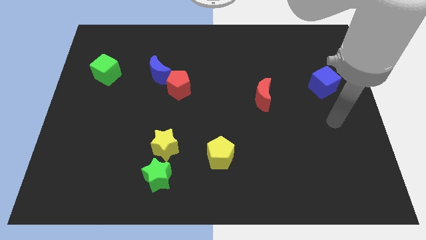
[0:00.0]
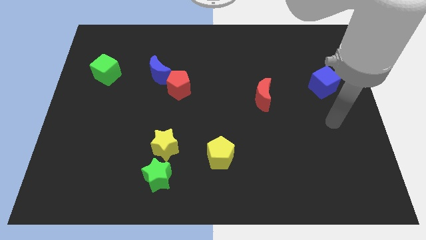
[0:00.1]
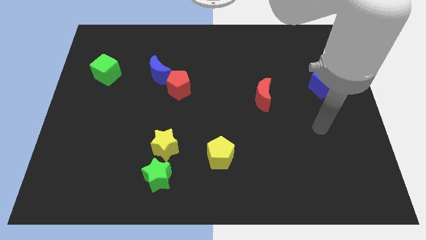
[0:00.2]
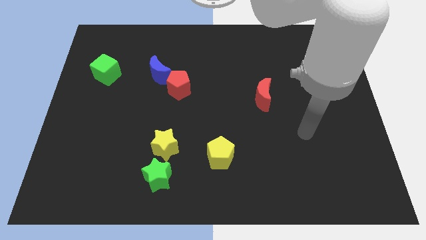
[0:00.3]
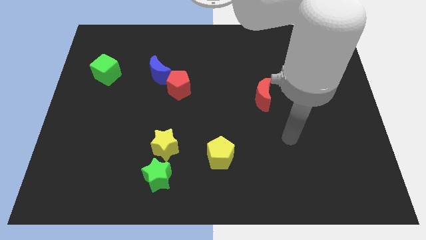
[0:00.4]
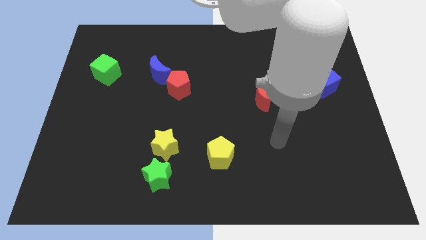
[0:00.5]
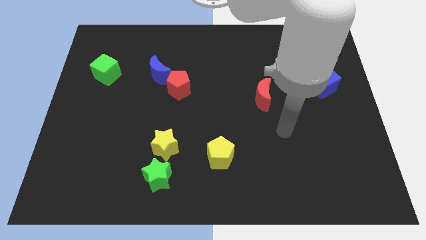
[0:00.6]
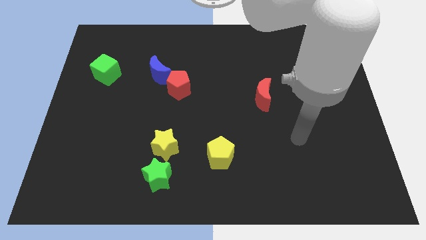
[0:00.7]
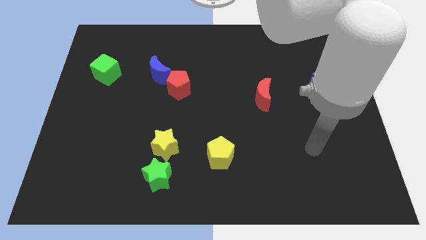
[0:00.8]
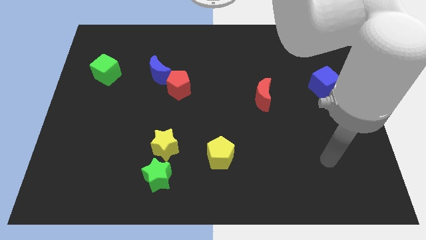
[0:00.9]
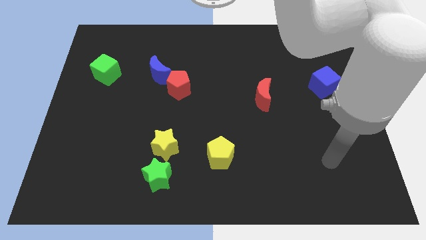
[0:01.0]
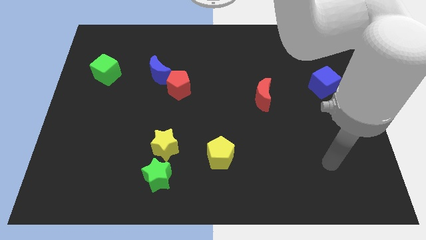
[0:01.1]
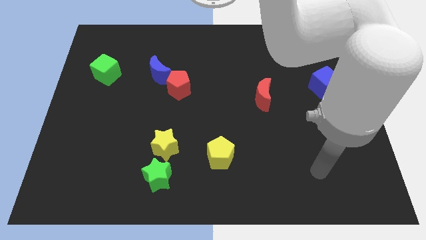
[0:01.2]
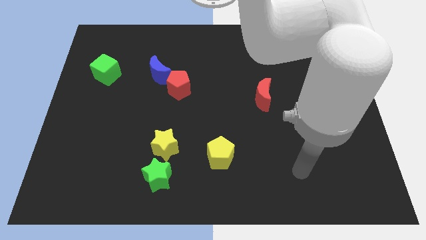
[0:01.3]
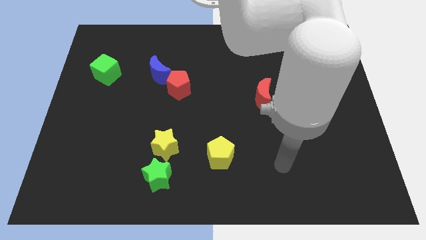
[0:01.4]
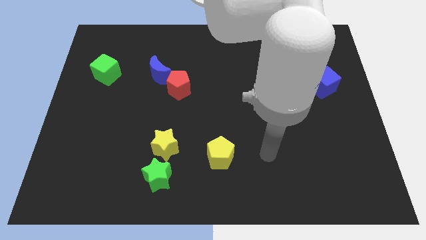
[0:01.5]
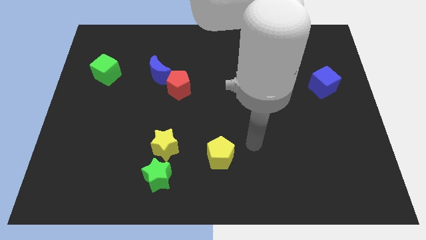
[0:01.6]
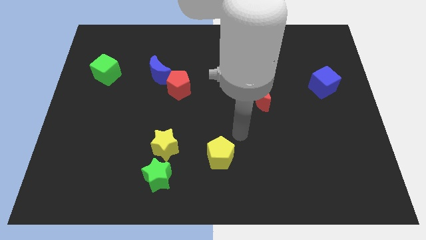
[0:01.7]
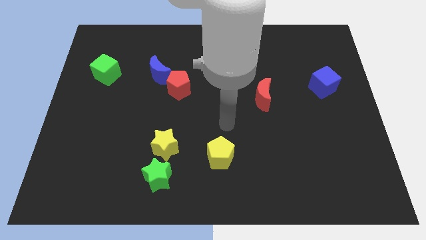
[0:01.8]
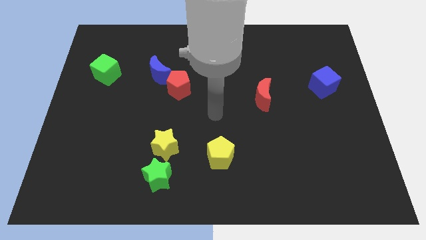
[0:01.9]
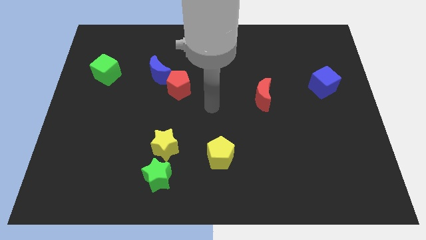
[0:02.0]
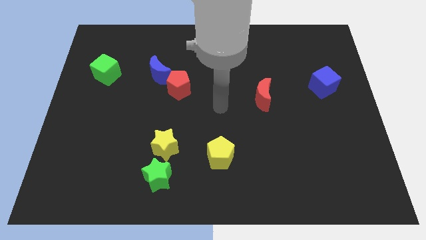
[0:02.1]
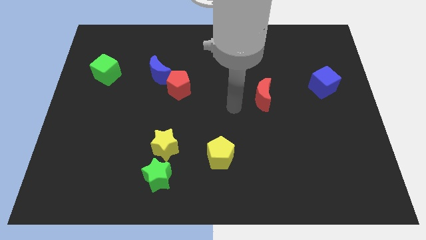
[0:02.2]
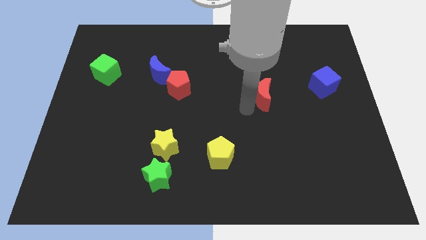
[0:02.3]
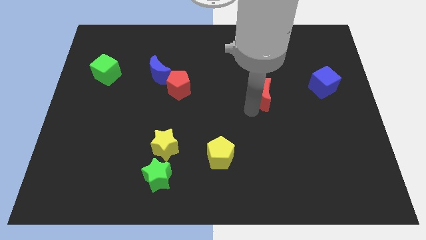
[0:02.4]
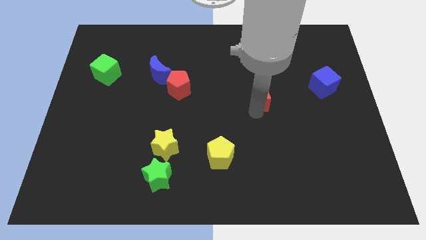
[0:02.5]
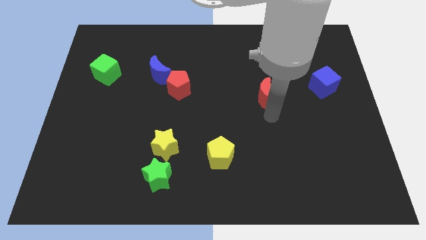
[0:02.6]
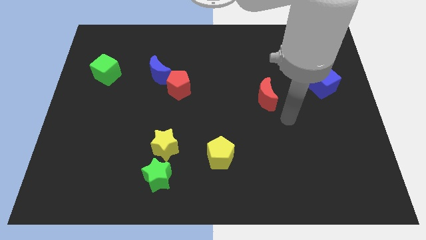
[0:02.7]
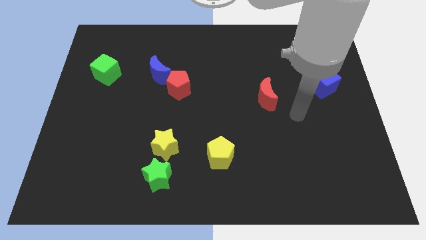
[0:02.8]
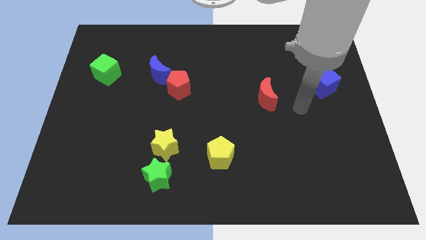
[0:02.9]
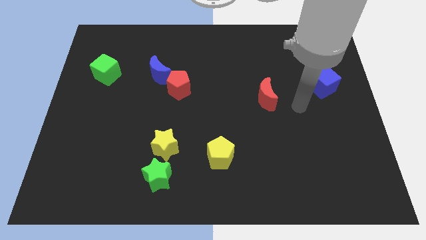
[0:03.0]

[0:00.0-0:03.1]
tap the red crescent

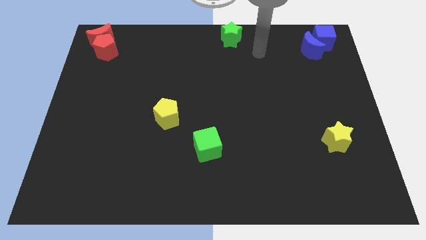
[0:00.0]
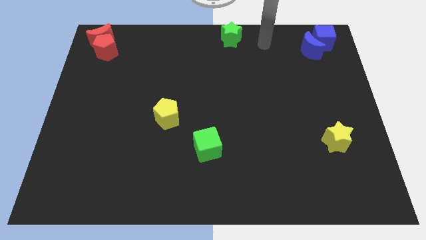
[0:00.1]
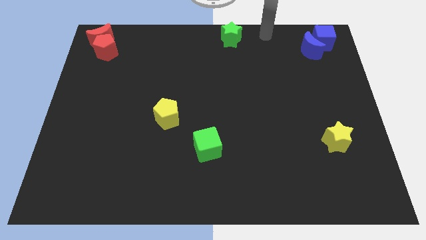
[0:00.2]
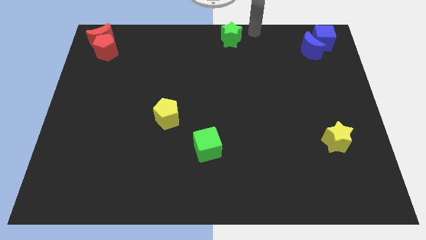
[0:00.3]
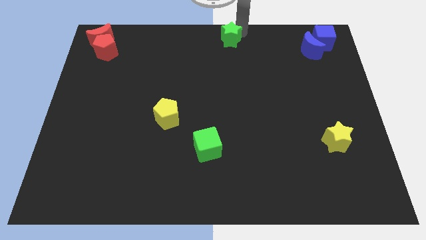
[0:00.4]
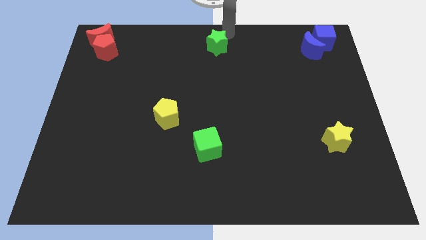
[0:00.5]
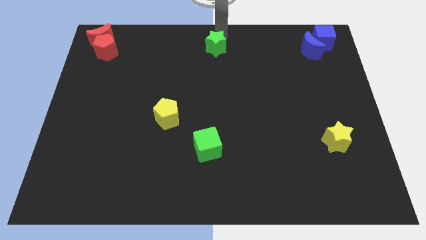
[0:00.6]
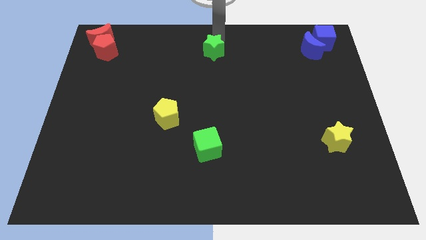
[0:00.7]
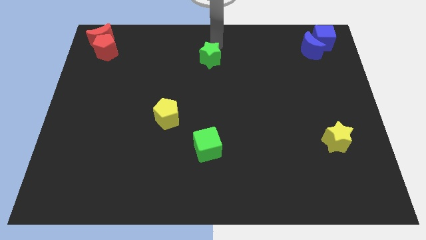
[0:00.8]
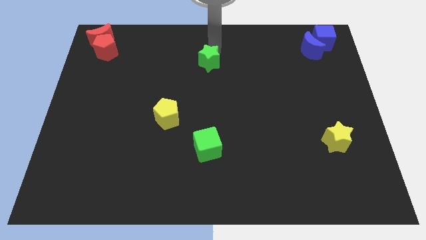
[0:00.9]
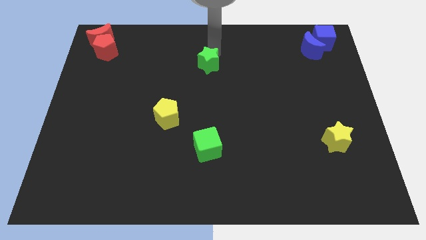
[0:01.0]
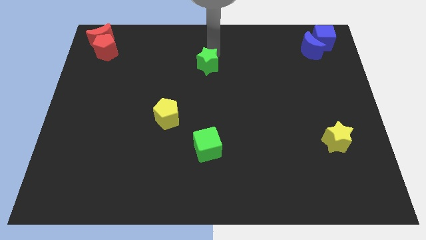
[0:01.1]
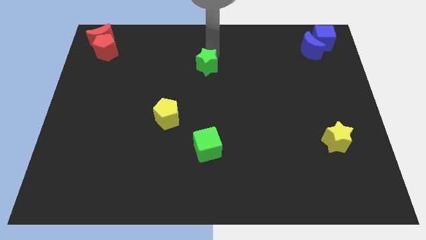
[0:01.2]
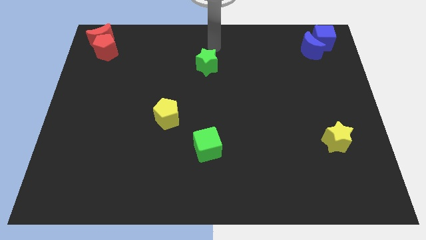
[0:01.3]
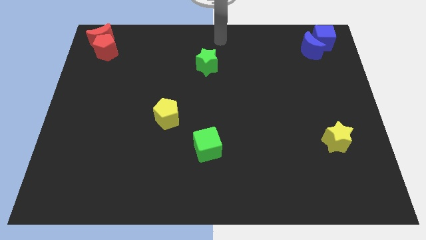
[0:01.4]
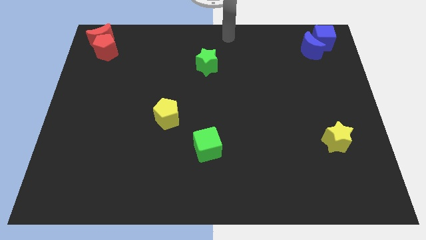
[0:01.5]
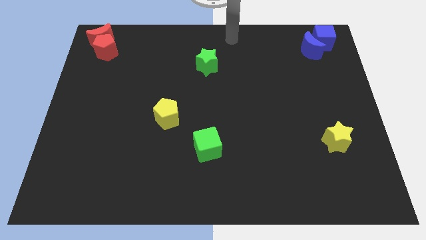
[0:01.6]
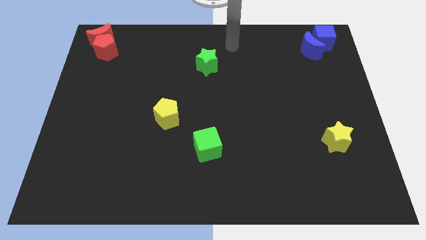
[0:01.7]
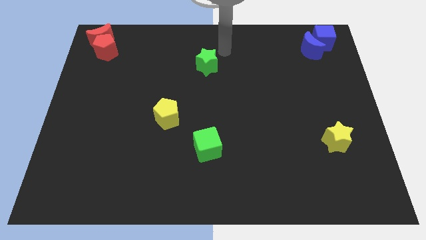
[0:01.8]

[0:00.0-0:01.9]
push the green star downwards

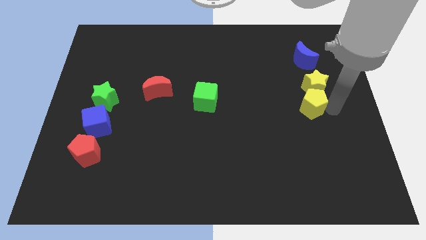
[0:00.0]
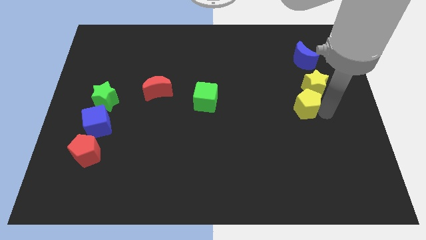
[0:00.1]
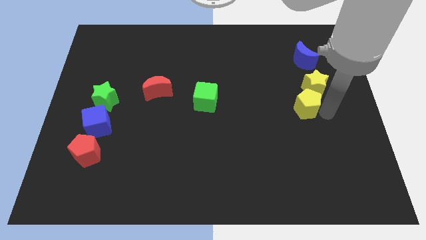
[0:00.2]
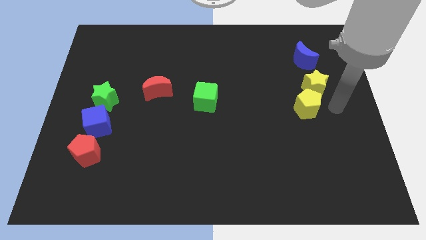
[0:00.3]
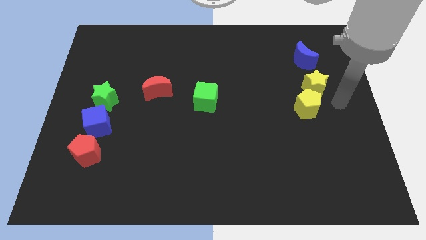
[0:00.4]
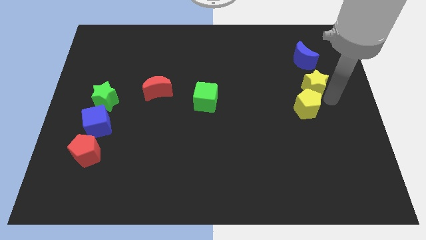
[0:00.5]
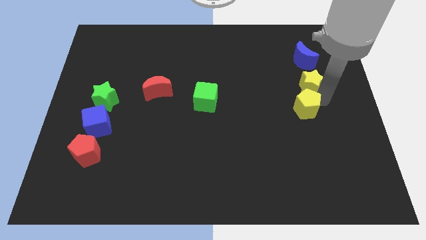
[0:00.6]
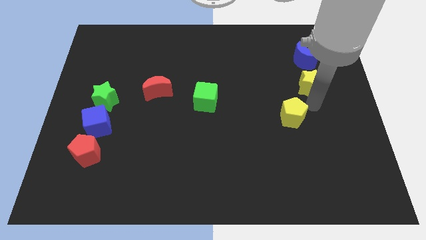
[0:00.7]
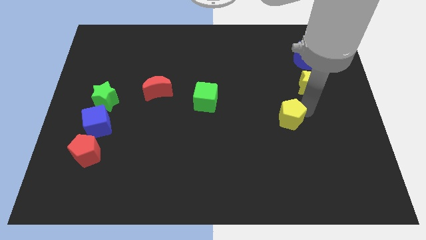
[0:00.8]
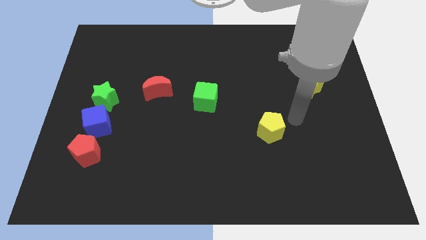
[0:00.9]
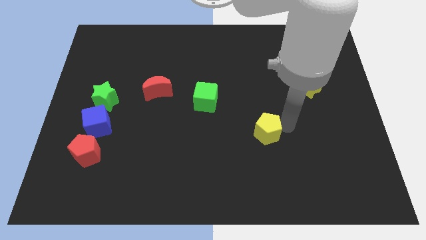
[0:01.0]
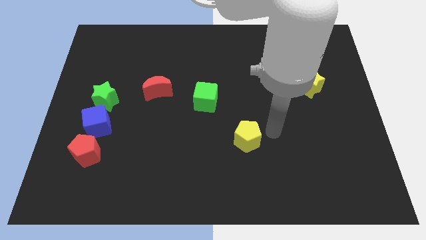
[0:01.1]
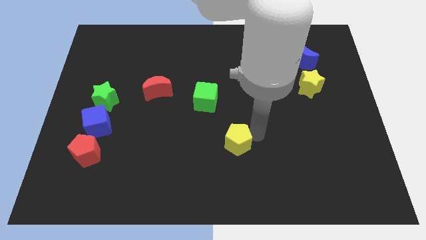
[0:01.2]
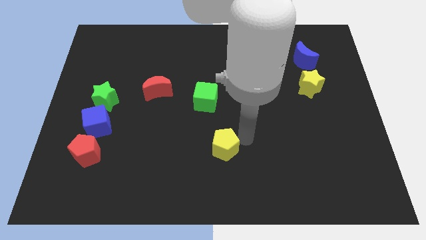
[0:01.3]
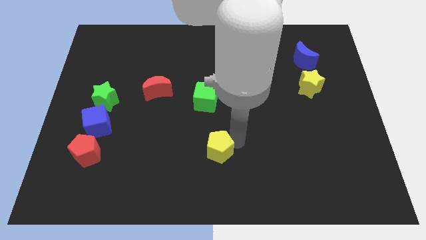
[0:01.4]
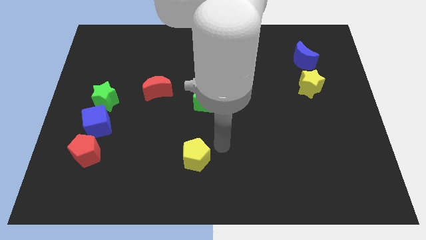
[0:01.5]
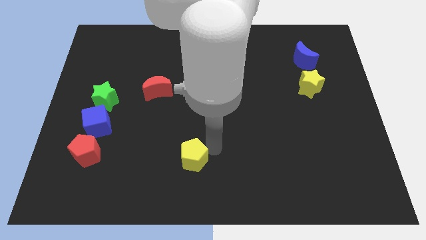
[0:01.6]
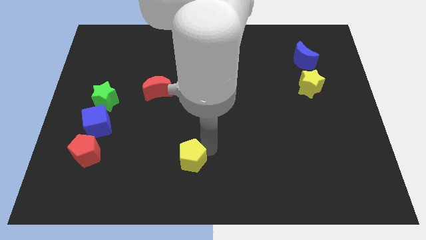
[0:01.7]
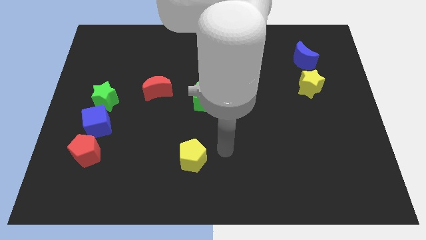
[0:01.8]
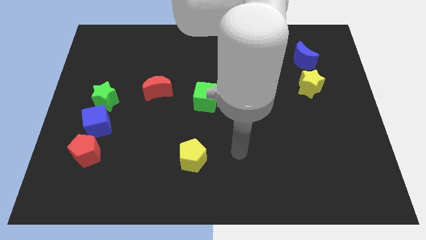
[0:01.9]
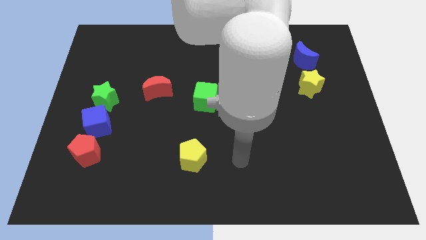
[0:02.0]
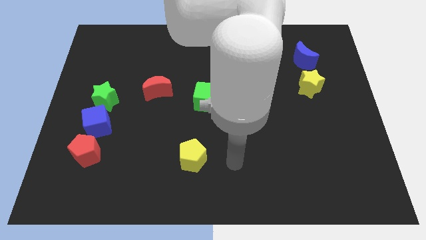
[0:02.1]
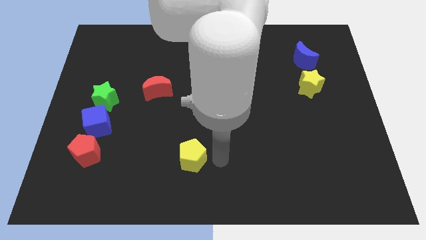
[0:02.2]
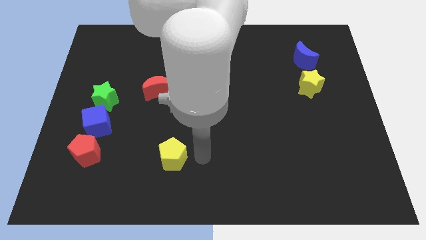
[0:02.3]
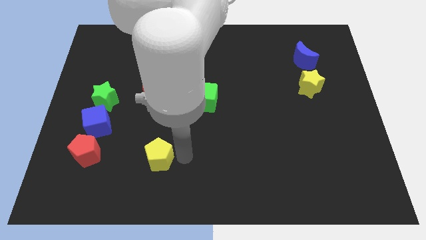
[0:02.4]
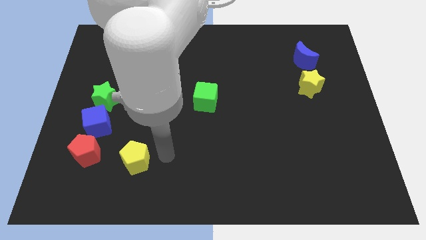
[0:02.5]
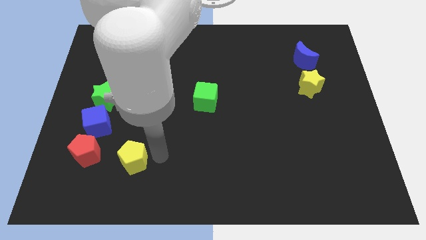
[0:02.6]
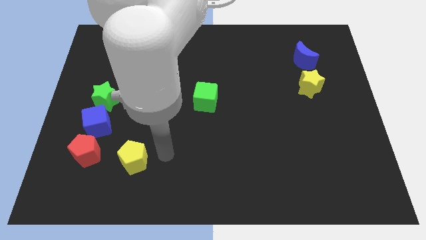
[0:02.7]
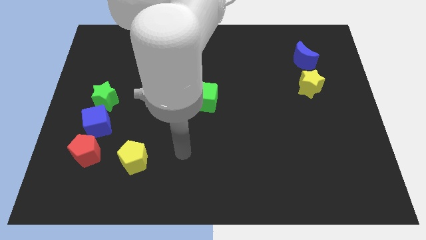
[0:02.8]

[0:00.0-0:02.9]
place the yellow pentagon below the red moon

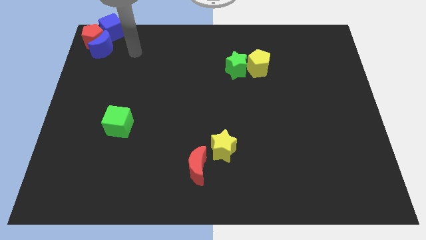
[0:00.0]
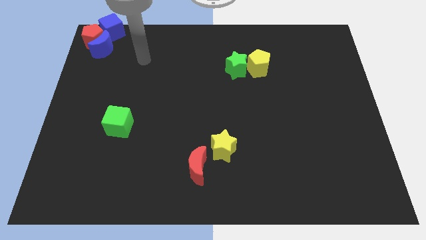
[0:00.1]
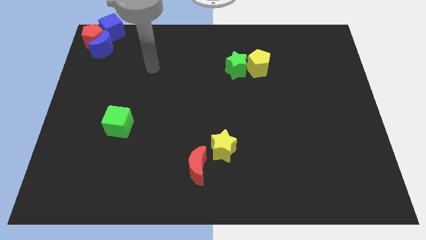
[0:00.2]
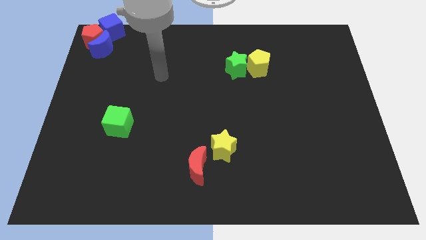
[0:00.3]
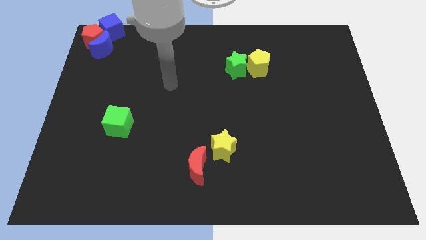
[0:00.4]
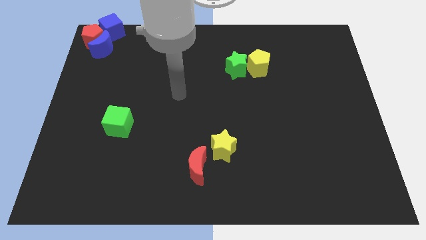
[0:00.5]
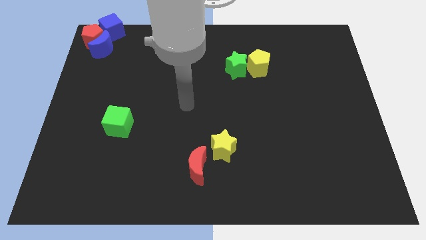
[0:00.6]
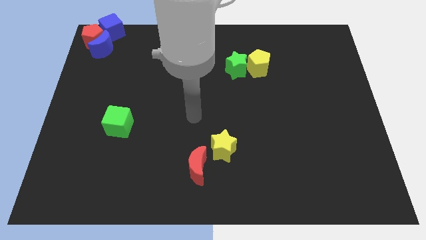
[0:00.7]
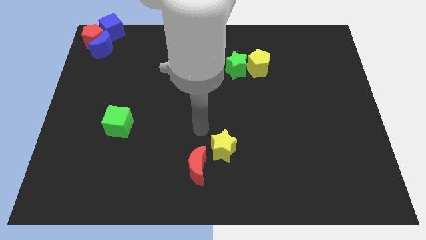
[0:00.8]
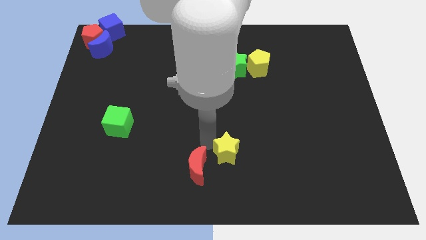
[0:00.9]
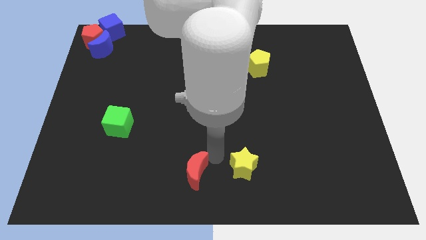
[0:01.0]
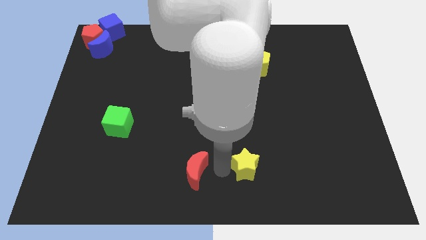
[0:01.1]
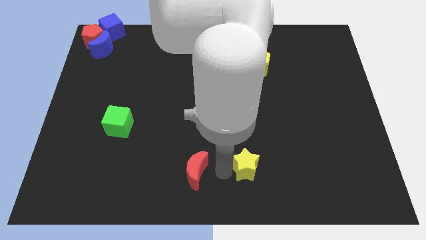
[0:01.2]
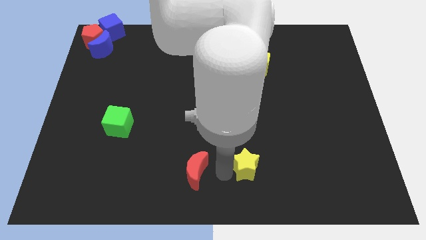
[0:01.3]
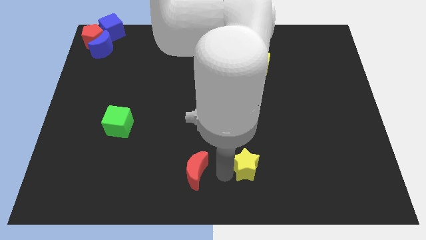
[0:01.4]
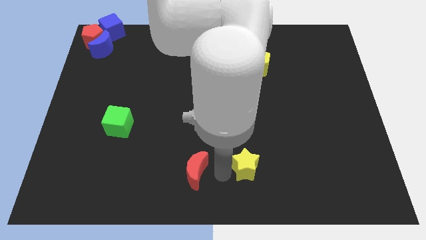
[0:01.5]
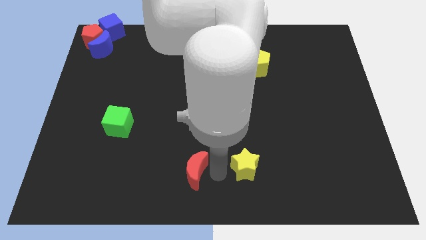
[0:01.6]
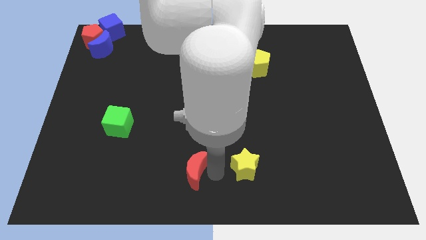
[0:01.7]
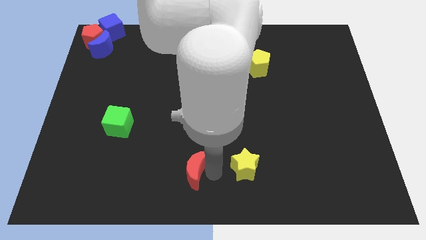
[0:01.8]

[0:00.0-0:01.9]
move the red moon away from the yellow star
